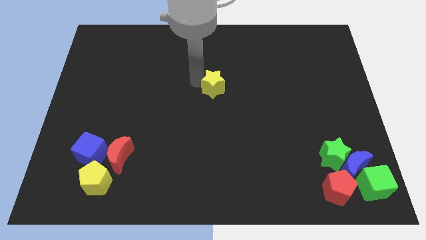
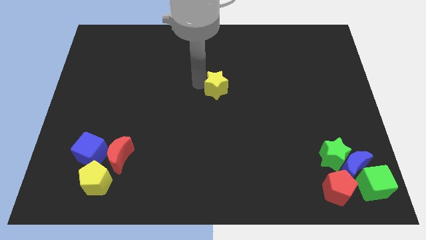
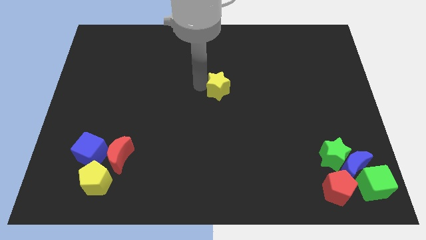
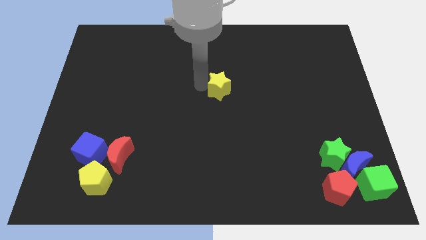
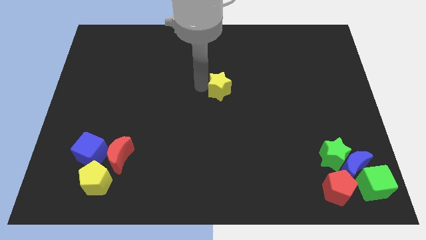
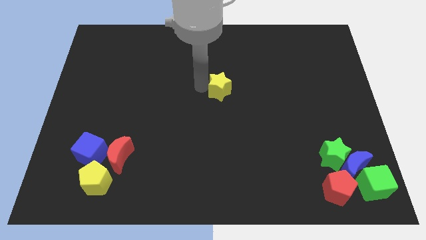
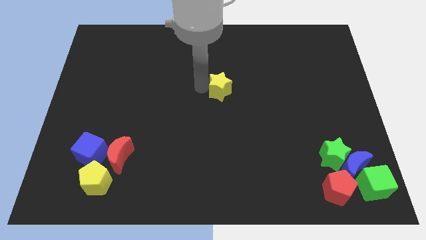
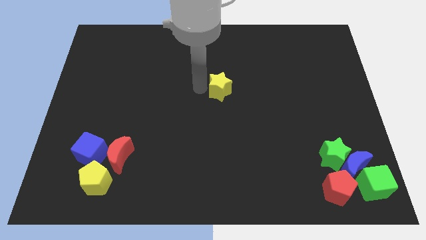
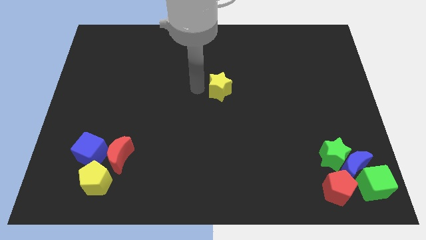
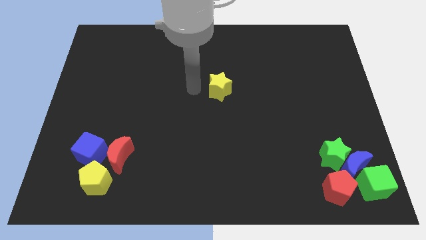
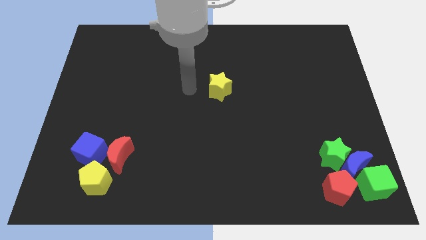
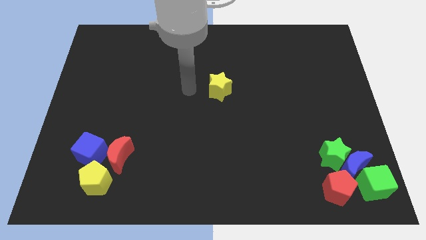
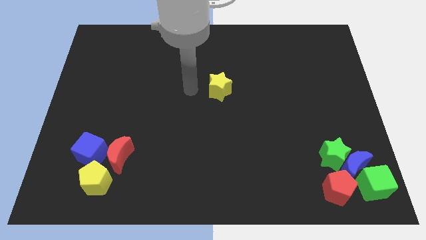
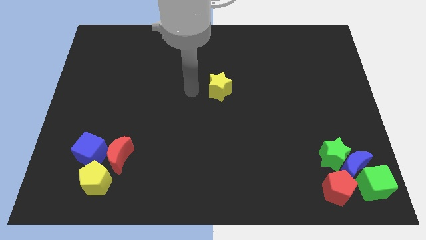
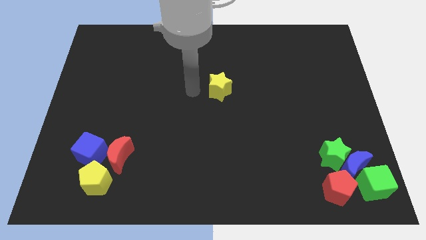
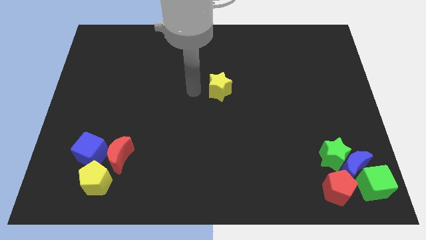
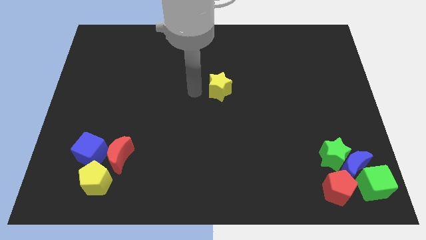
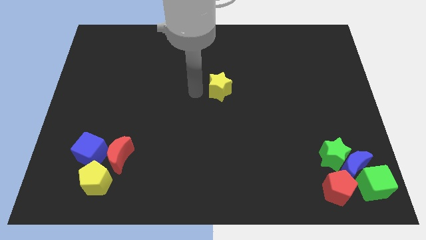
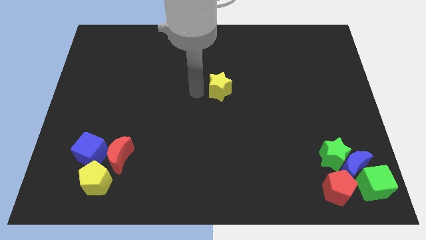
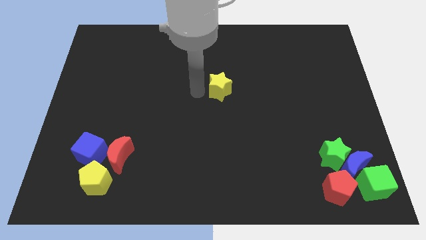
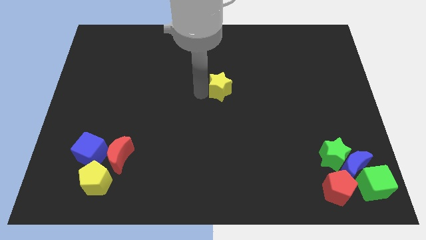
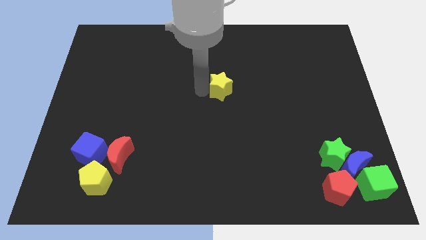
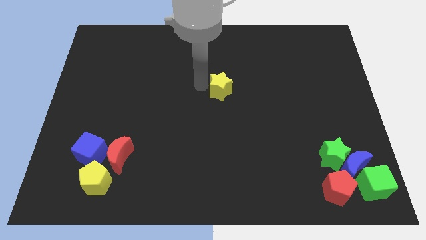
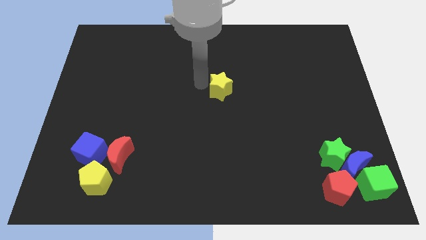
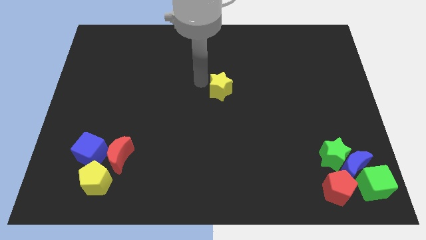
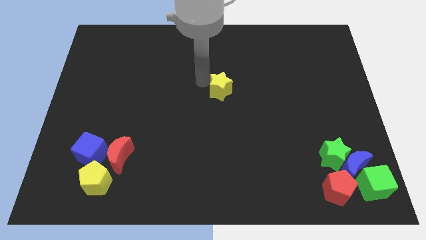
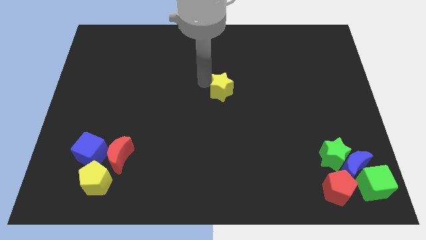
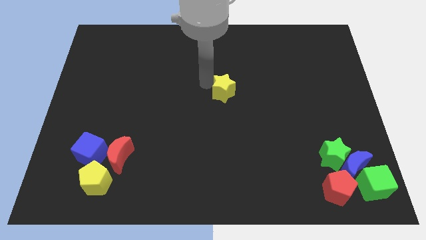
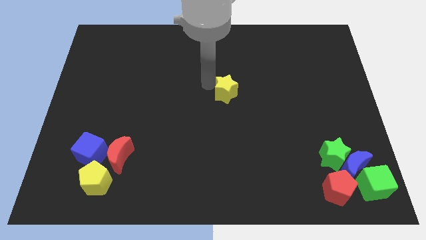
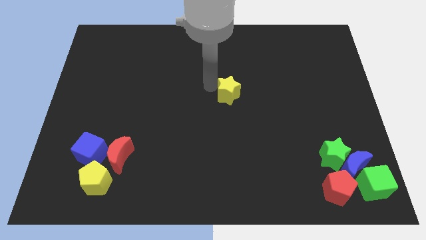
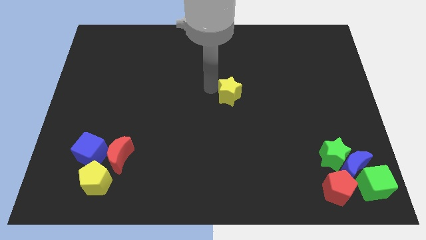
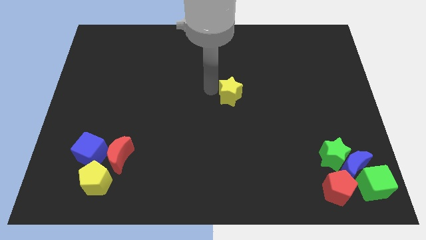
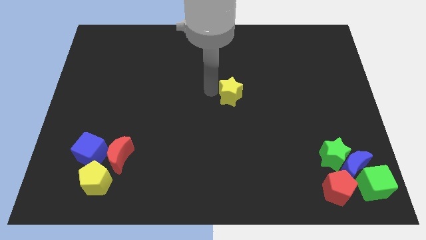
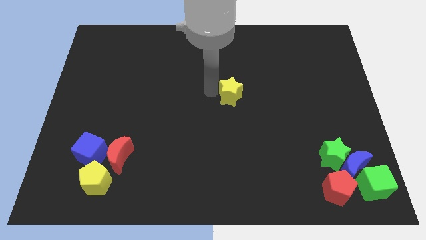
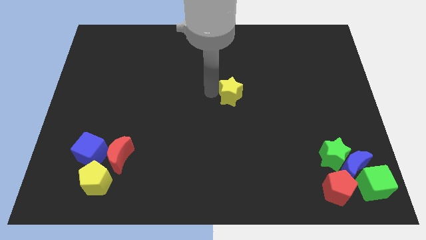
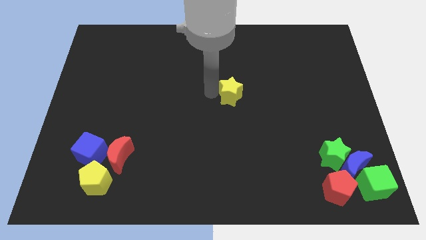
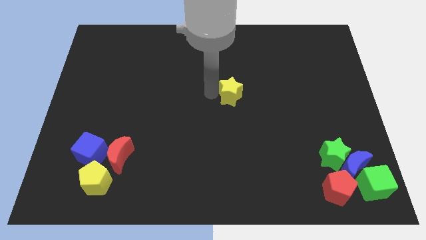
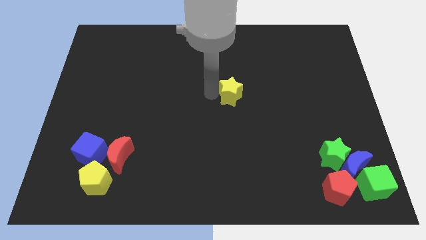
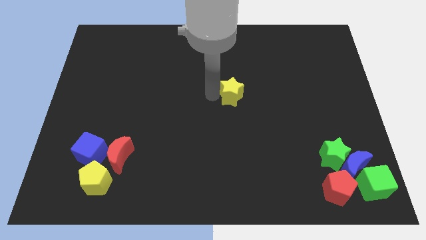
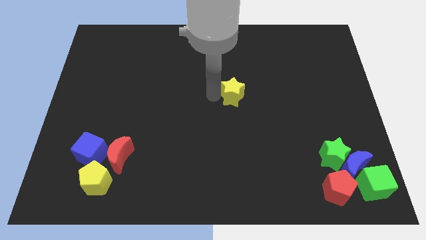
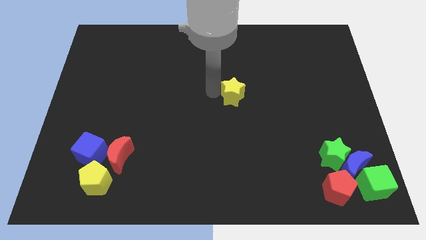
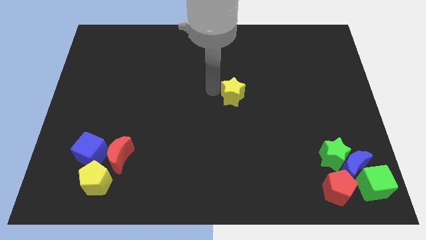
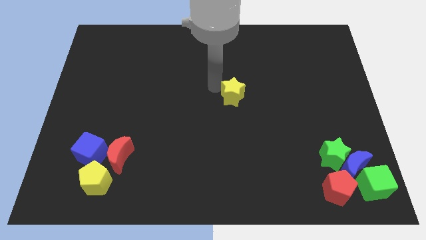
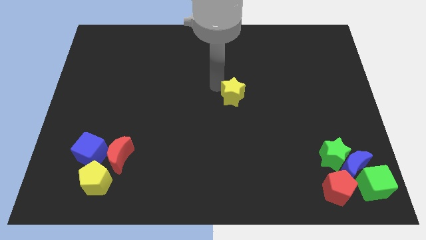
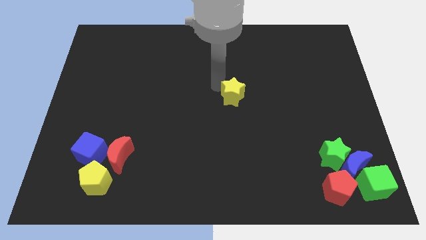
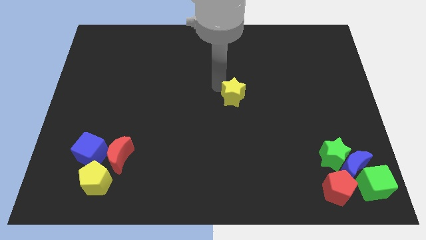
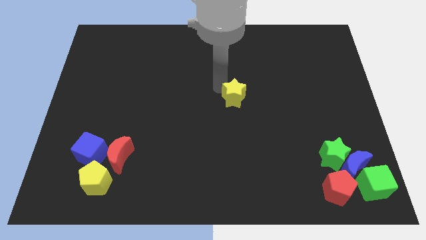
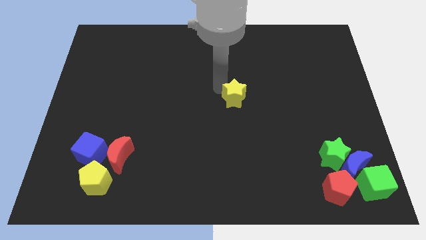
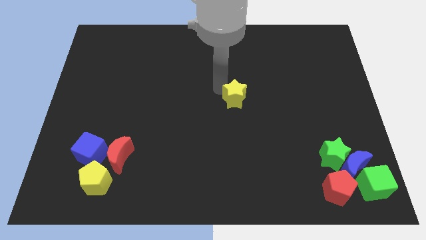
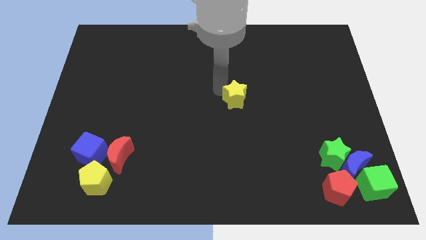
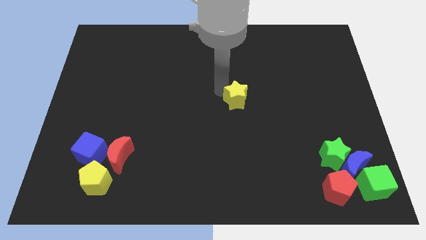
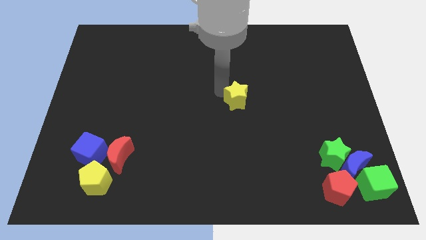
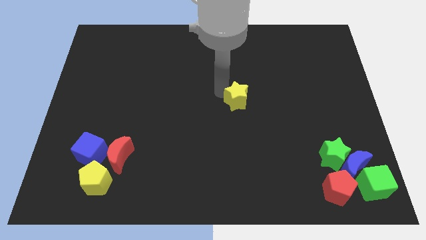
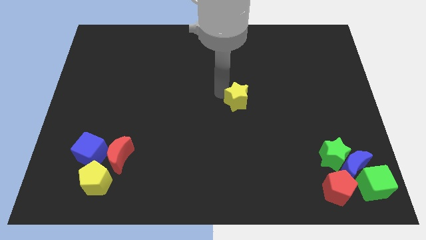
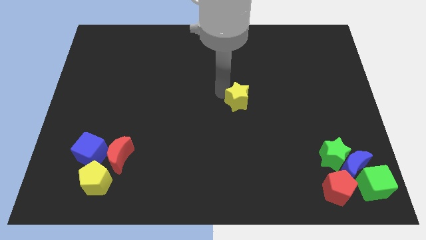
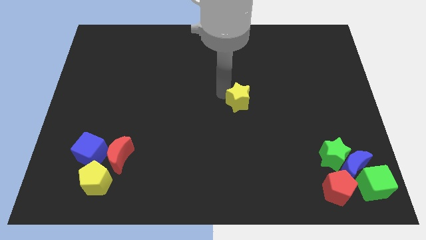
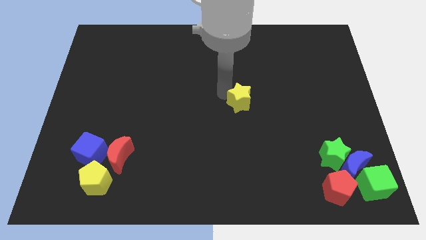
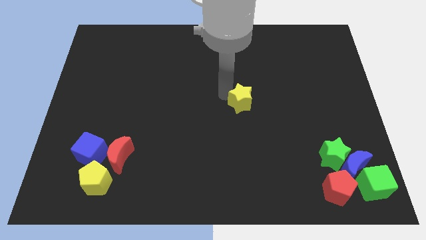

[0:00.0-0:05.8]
move the yellow star to the top left of the green star

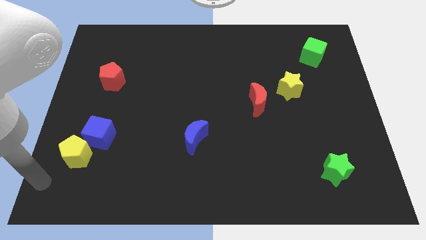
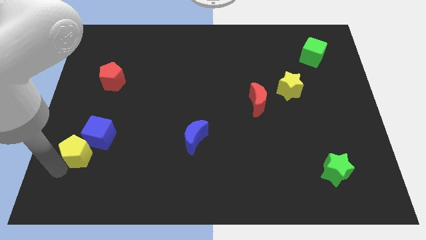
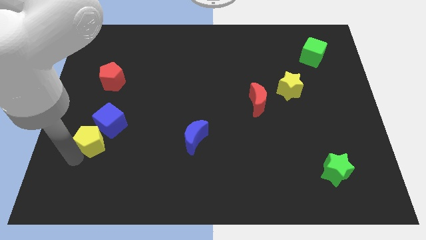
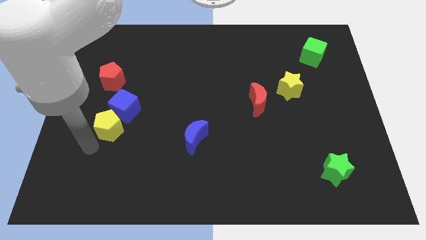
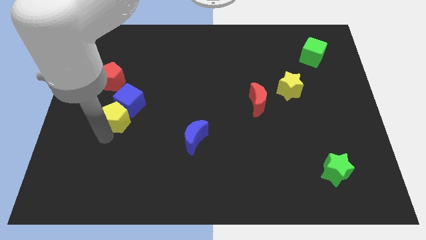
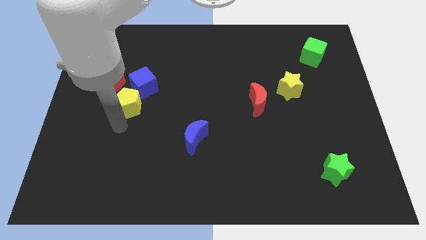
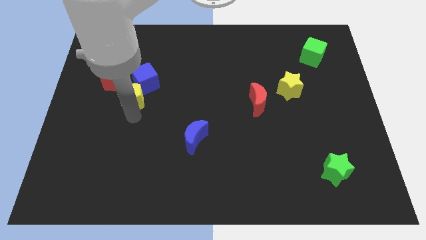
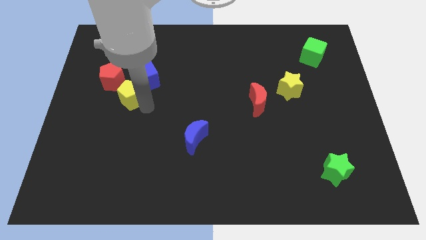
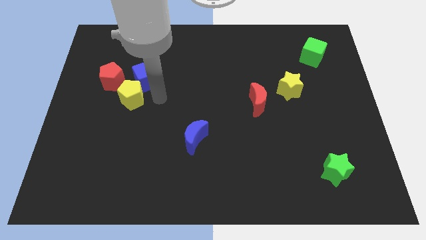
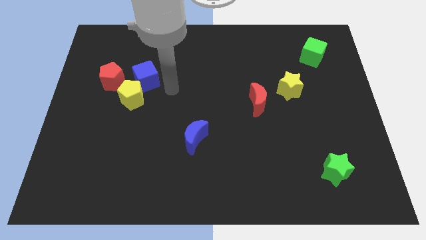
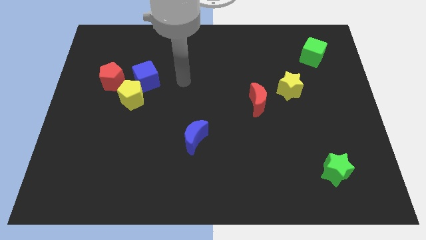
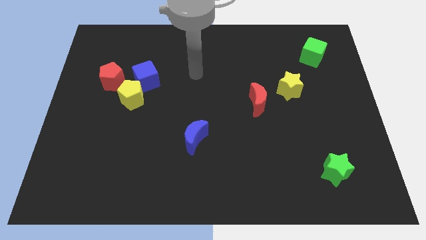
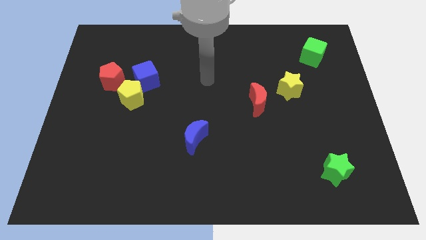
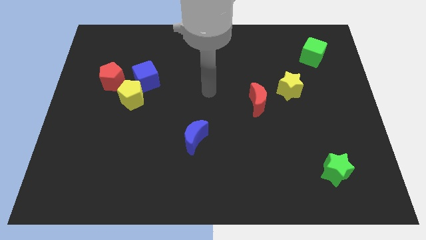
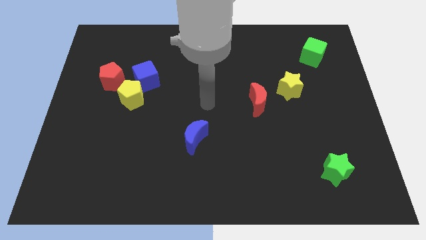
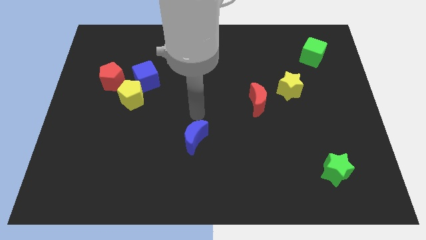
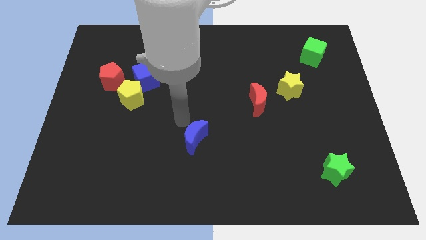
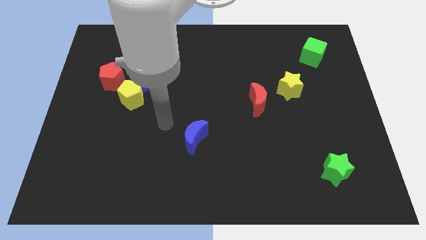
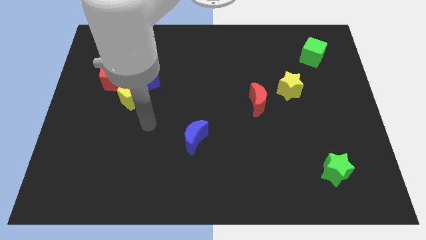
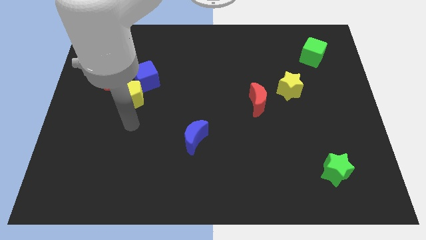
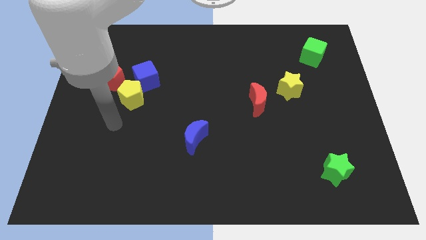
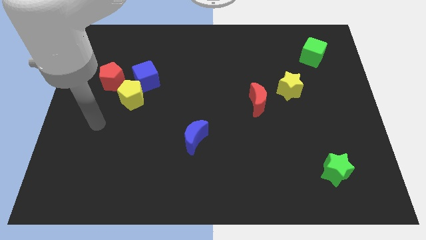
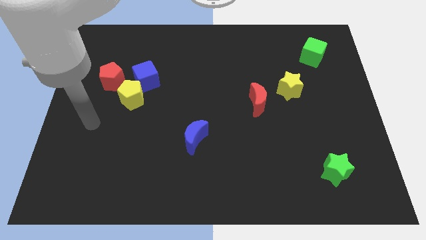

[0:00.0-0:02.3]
place yellow pentagon and blue cube near the red pentagon

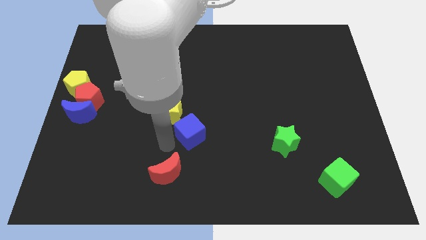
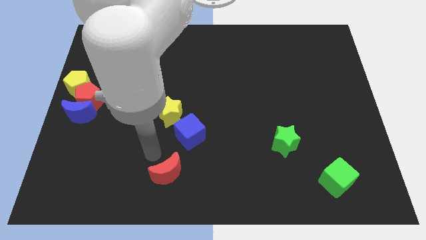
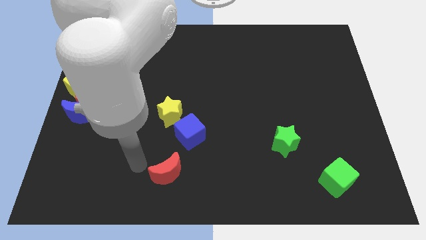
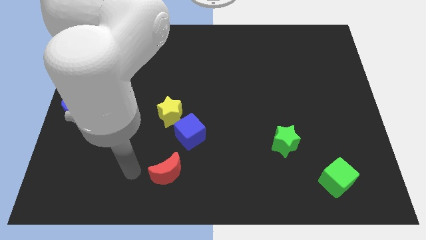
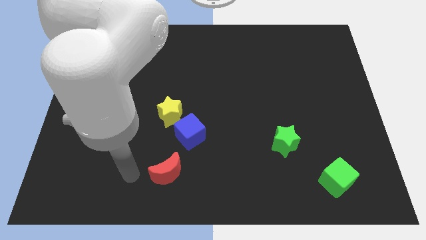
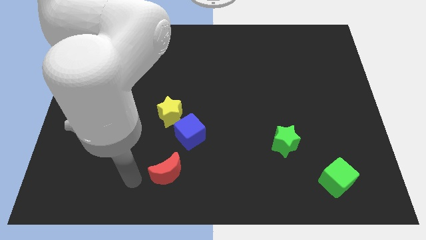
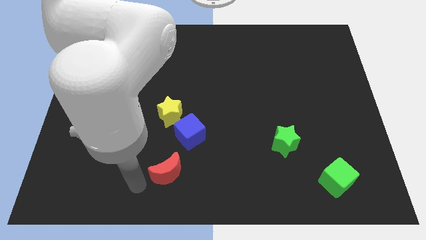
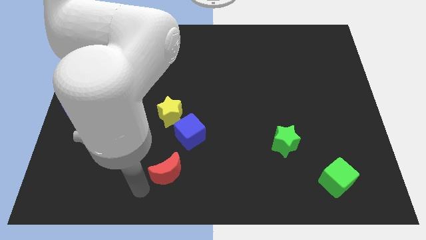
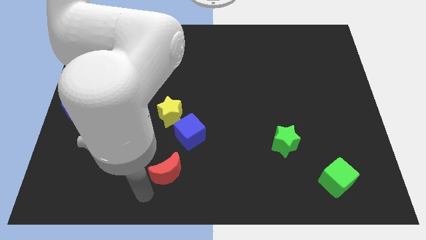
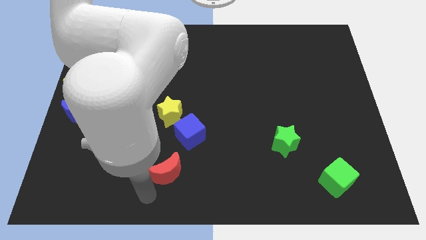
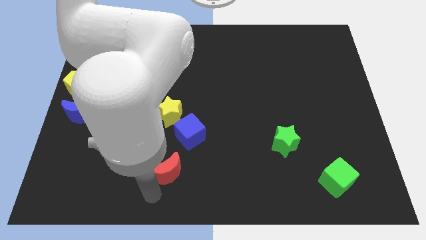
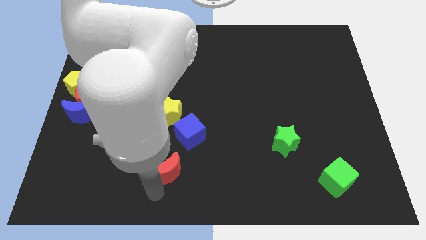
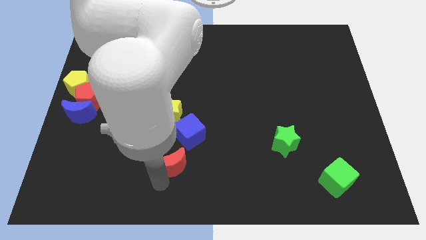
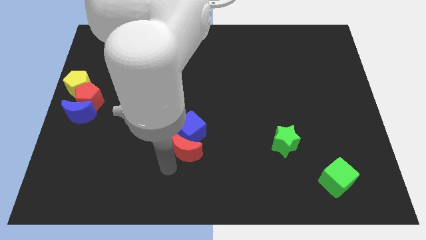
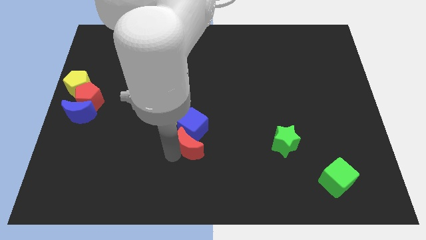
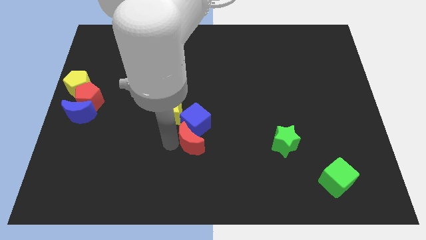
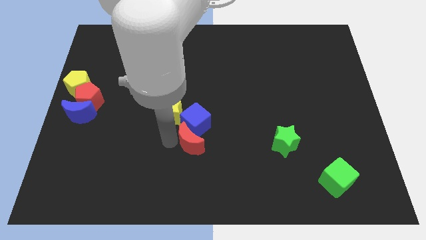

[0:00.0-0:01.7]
put the red moon into the blue cube
